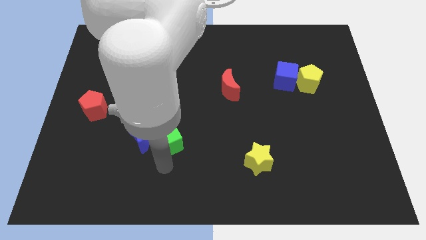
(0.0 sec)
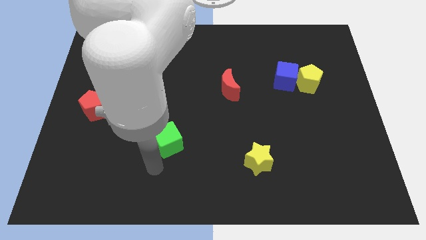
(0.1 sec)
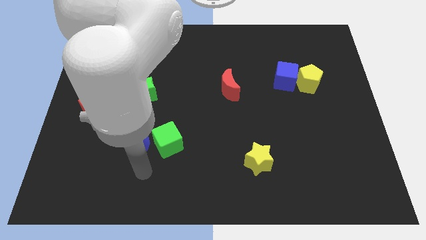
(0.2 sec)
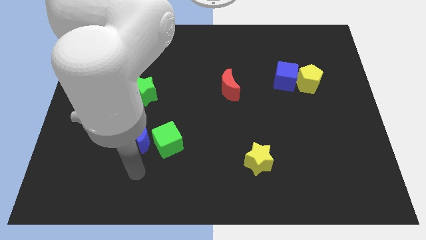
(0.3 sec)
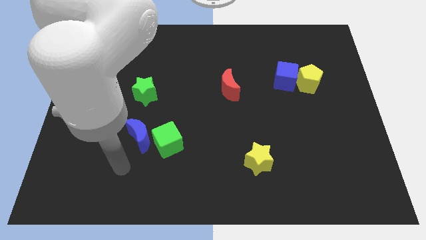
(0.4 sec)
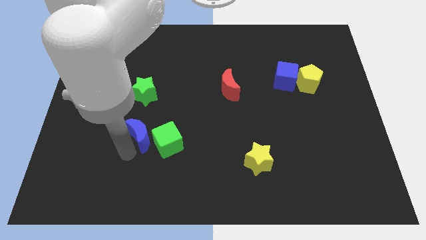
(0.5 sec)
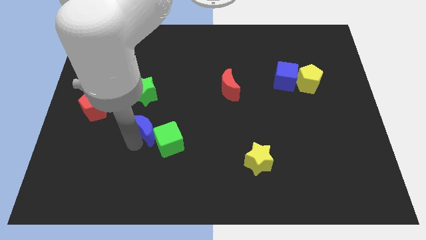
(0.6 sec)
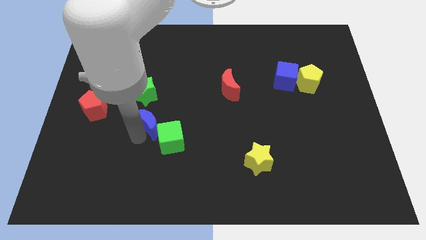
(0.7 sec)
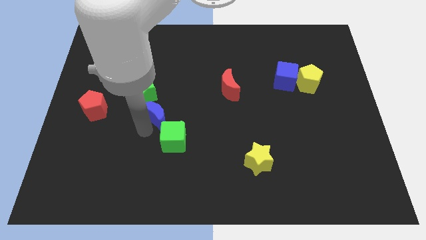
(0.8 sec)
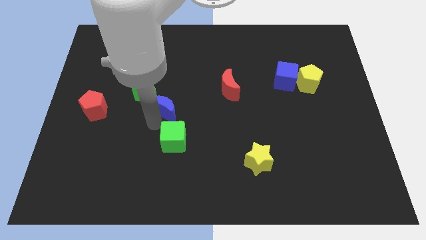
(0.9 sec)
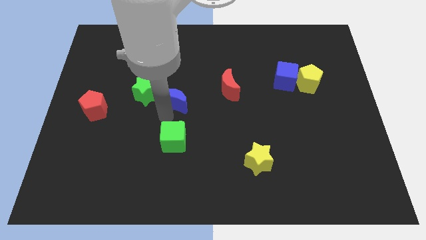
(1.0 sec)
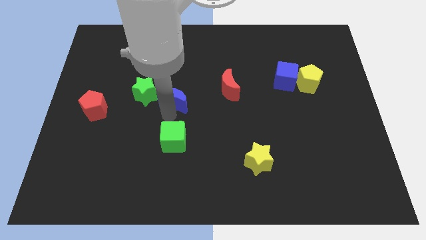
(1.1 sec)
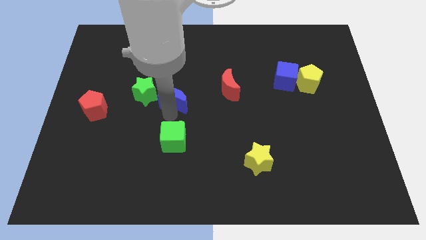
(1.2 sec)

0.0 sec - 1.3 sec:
move the blue moon above the green cube

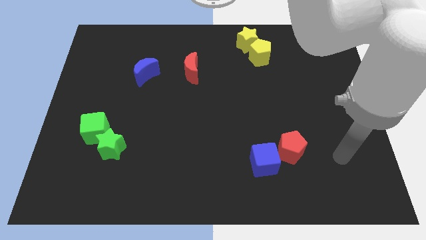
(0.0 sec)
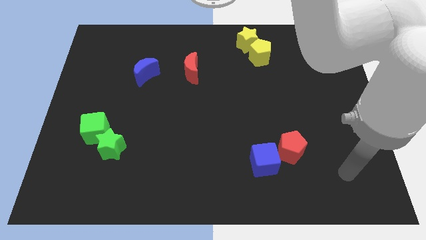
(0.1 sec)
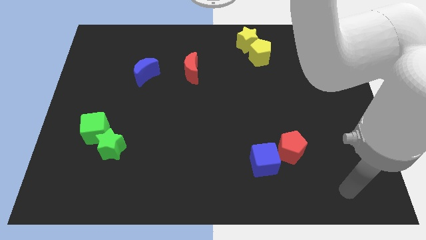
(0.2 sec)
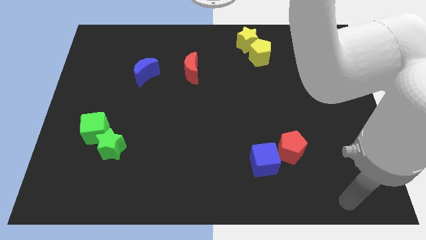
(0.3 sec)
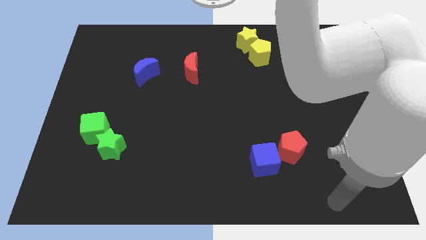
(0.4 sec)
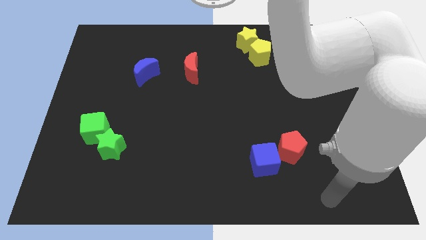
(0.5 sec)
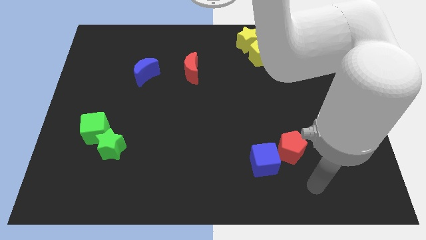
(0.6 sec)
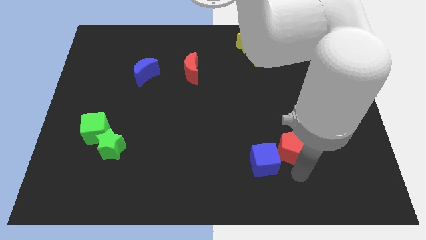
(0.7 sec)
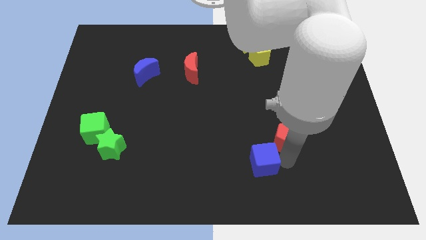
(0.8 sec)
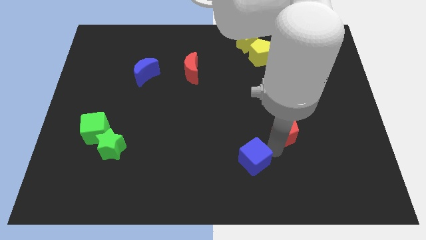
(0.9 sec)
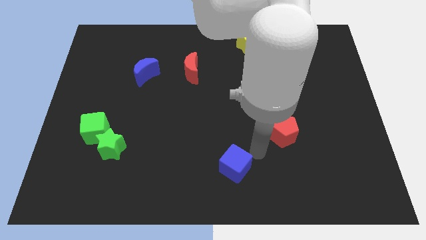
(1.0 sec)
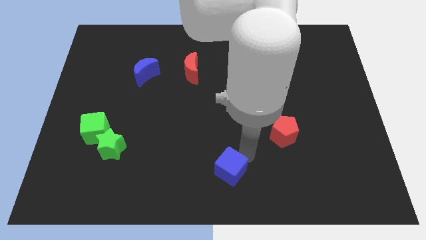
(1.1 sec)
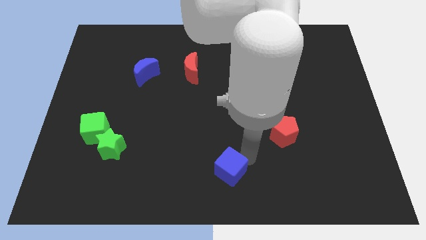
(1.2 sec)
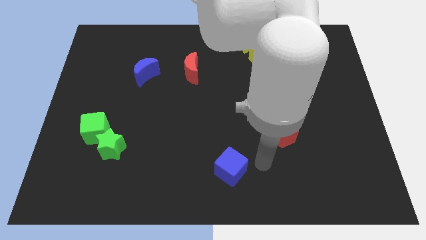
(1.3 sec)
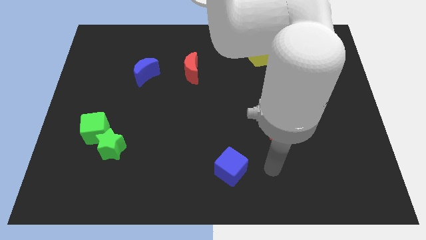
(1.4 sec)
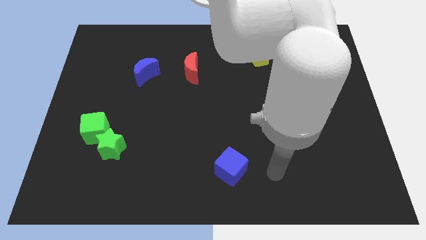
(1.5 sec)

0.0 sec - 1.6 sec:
separate blue cube and red pentagon

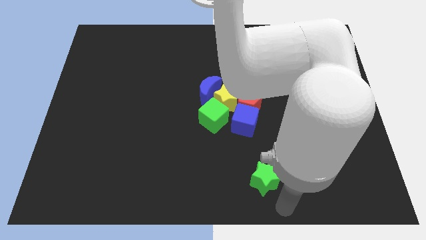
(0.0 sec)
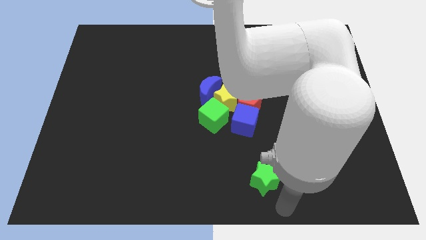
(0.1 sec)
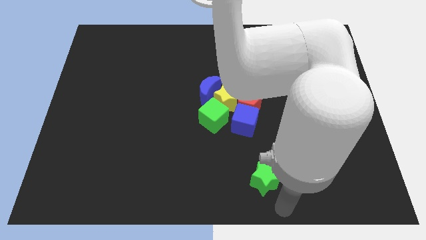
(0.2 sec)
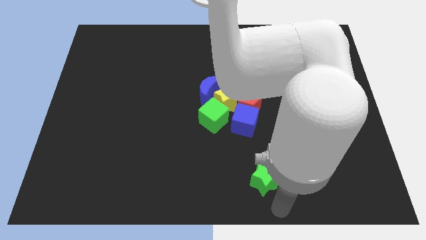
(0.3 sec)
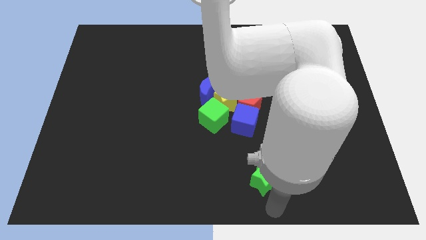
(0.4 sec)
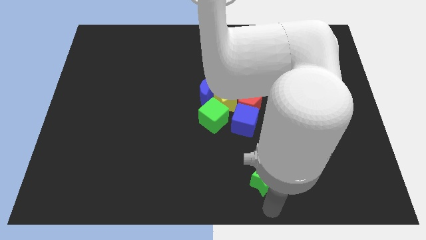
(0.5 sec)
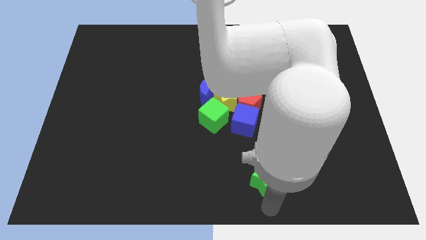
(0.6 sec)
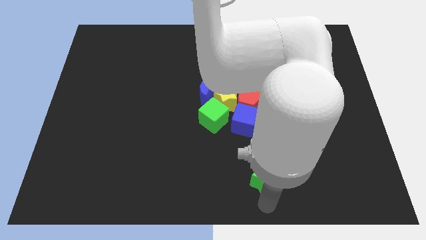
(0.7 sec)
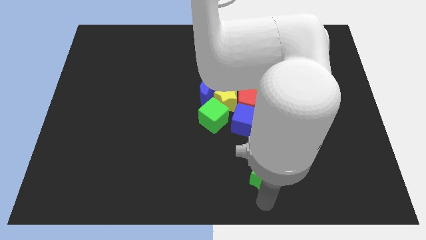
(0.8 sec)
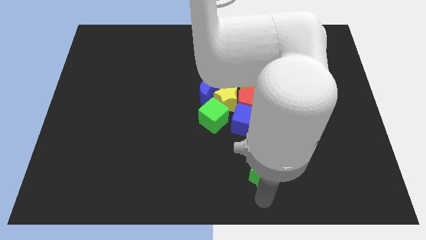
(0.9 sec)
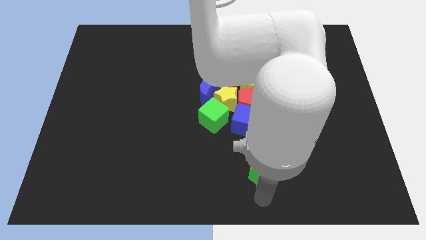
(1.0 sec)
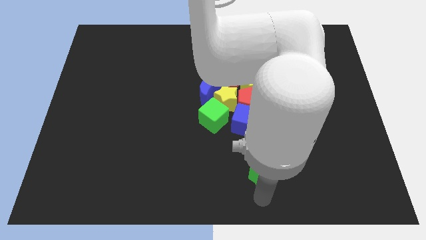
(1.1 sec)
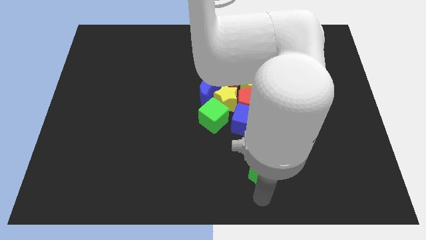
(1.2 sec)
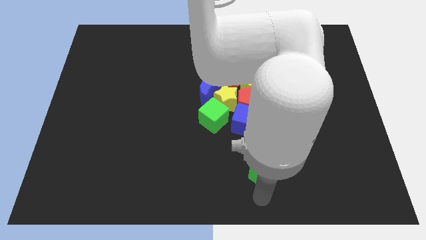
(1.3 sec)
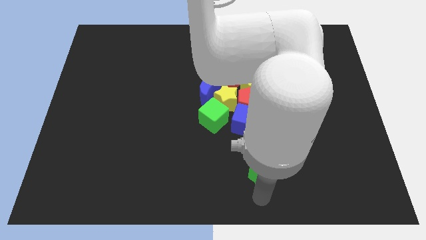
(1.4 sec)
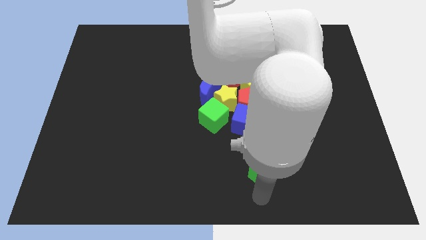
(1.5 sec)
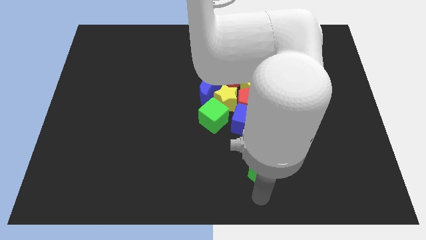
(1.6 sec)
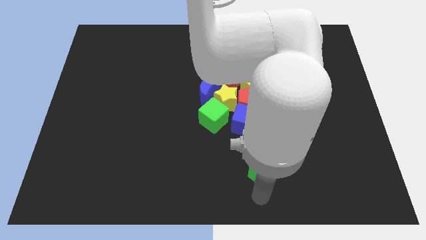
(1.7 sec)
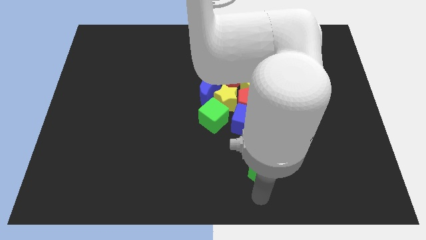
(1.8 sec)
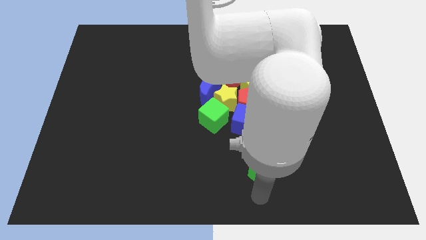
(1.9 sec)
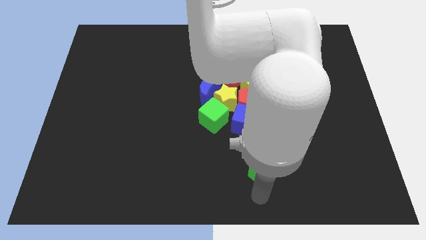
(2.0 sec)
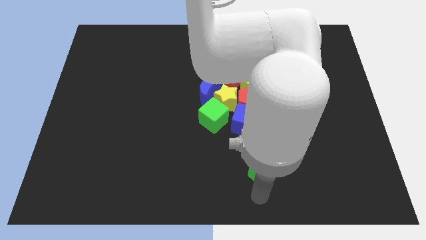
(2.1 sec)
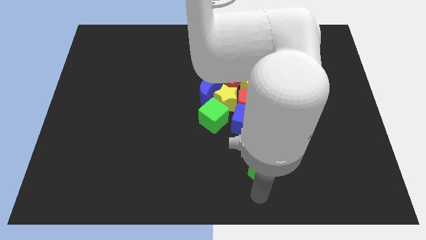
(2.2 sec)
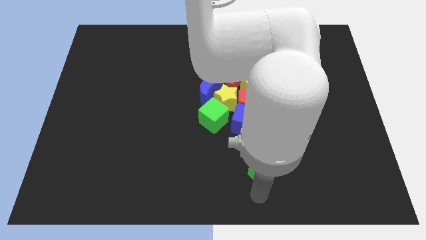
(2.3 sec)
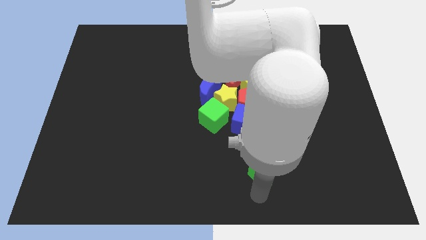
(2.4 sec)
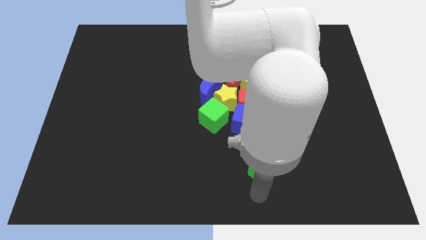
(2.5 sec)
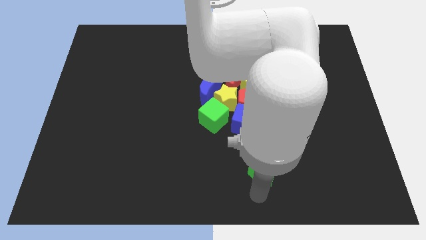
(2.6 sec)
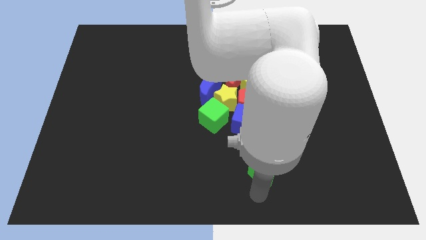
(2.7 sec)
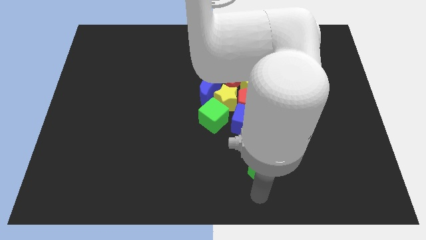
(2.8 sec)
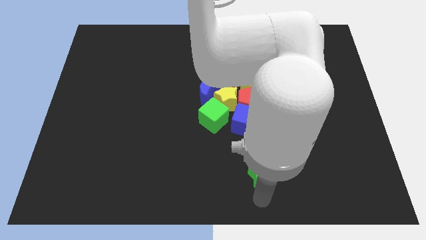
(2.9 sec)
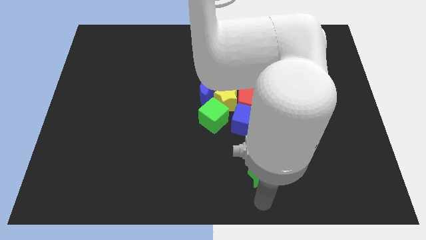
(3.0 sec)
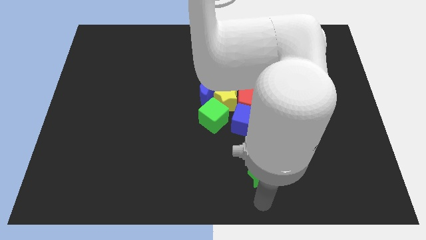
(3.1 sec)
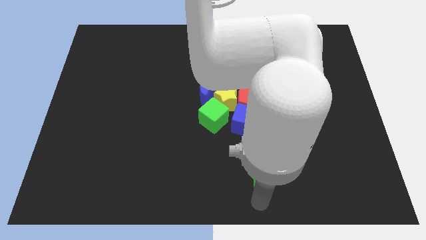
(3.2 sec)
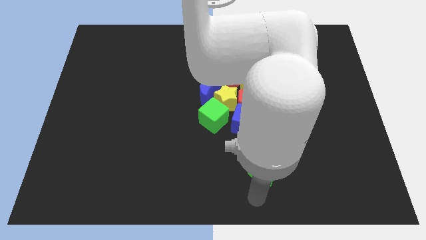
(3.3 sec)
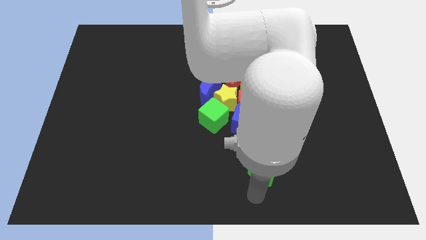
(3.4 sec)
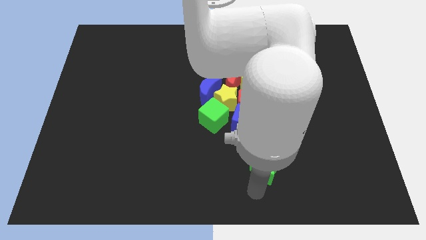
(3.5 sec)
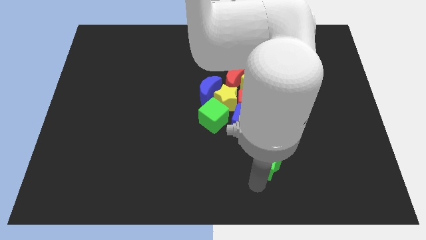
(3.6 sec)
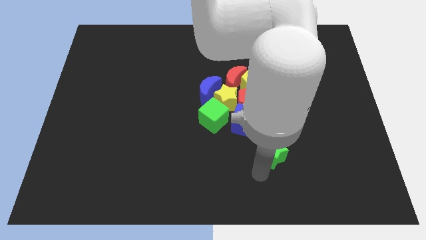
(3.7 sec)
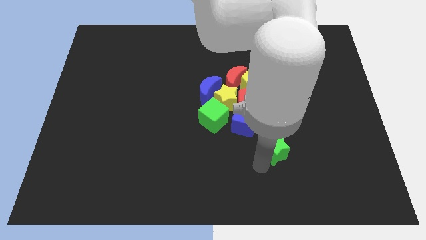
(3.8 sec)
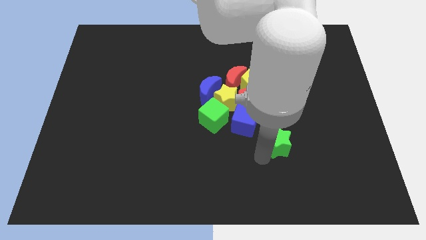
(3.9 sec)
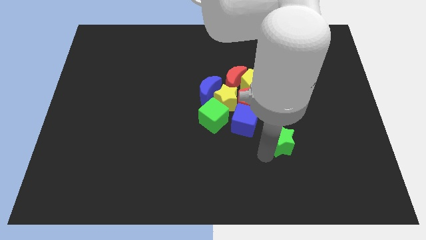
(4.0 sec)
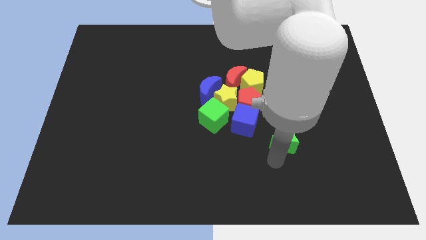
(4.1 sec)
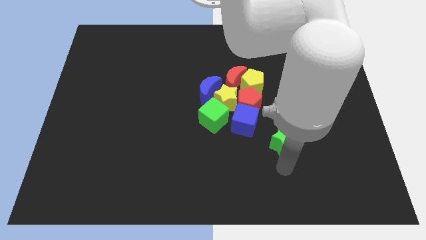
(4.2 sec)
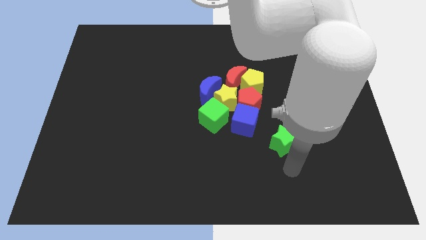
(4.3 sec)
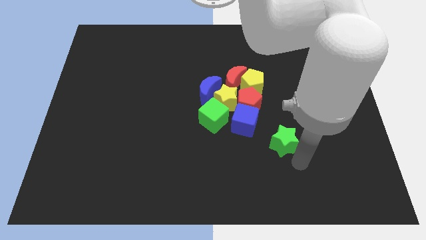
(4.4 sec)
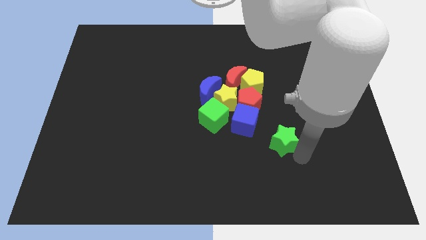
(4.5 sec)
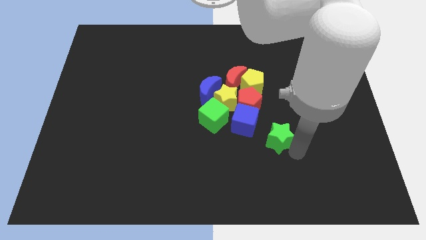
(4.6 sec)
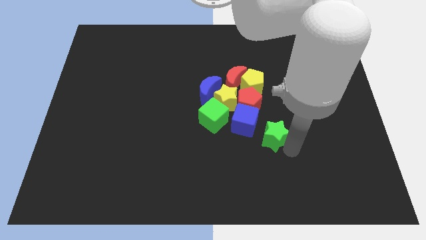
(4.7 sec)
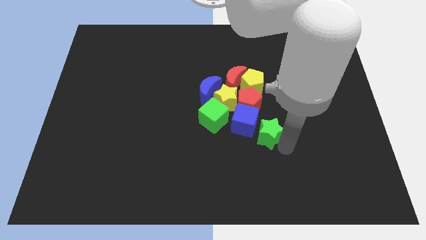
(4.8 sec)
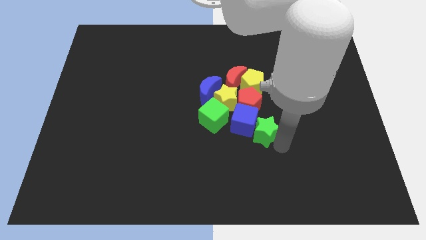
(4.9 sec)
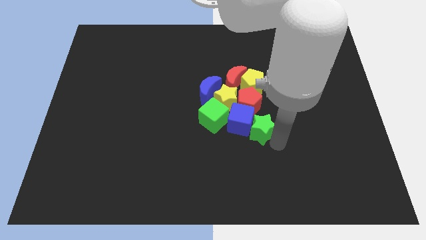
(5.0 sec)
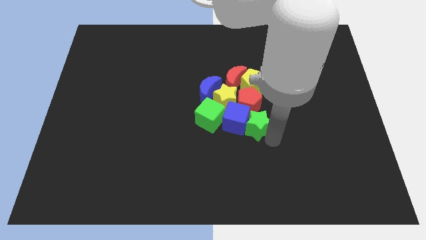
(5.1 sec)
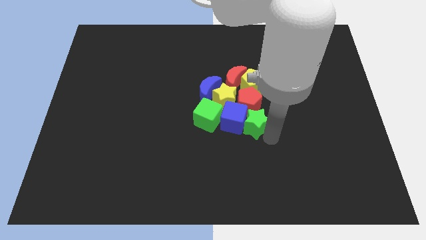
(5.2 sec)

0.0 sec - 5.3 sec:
push the green star into the blue cube

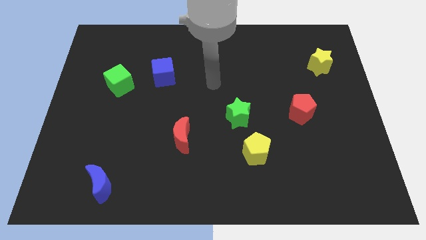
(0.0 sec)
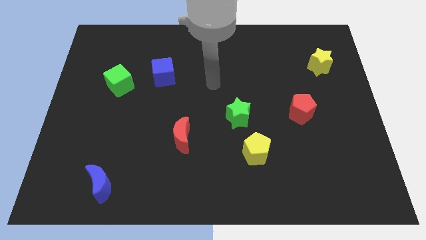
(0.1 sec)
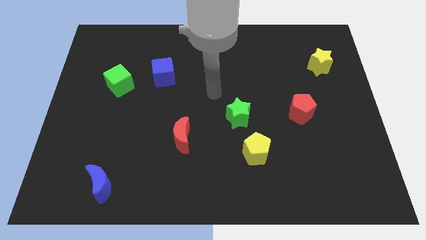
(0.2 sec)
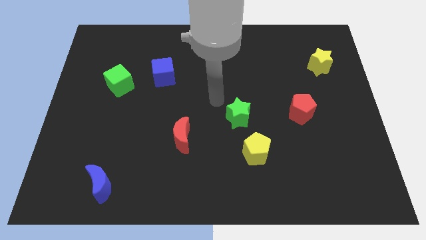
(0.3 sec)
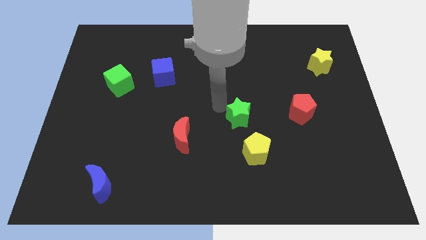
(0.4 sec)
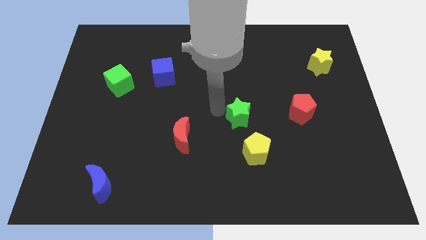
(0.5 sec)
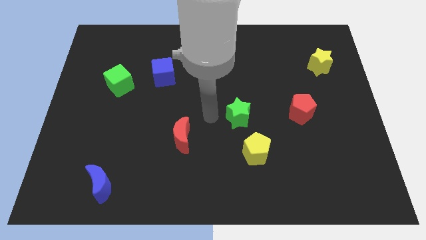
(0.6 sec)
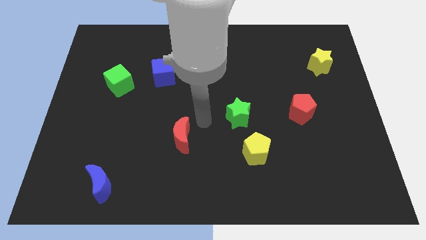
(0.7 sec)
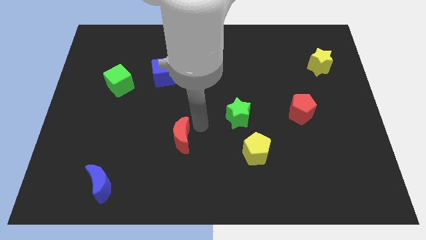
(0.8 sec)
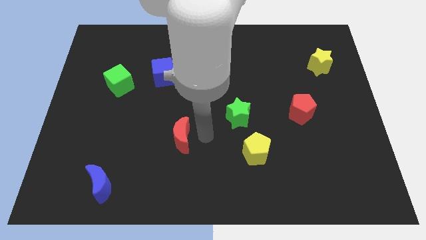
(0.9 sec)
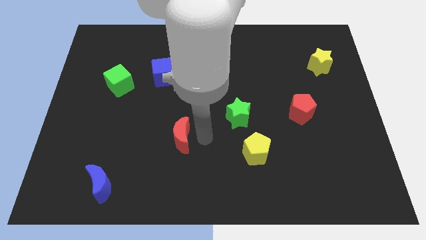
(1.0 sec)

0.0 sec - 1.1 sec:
point your arm at the right side of the red crescent
